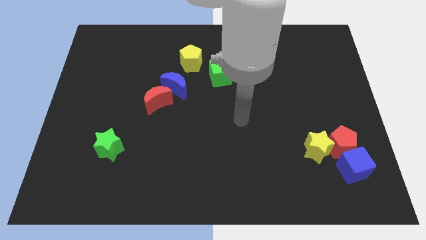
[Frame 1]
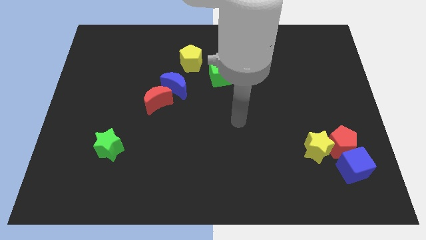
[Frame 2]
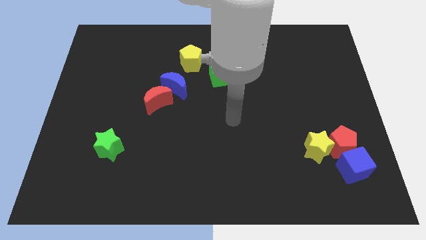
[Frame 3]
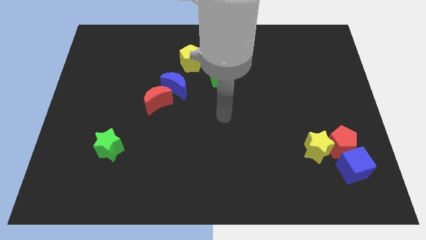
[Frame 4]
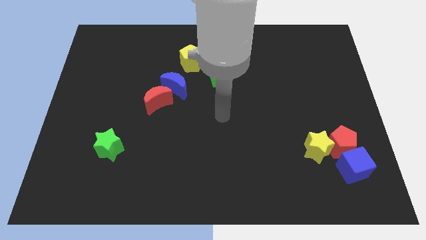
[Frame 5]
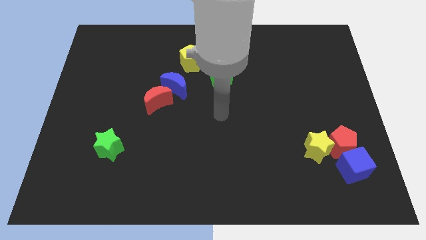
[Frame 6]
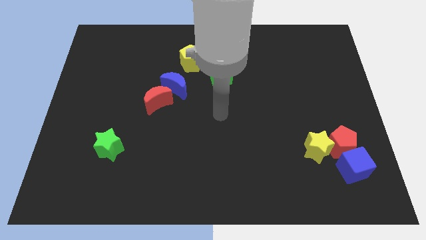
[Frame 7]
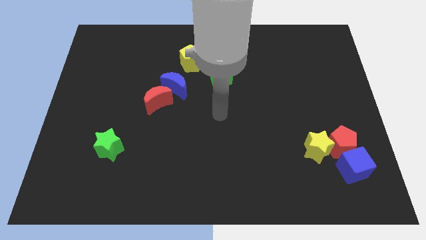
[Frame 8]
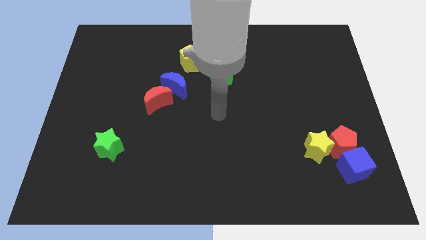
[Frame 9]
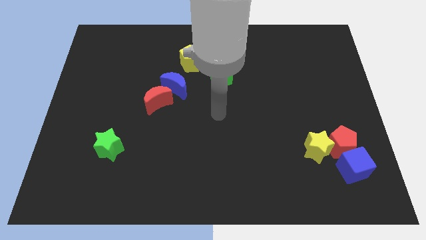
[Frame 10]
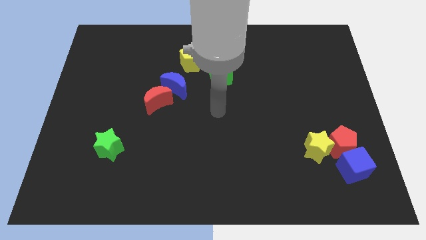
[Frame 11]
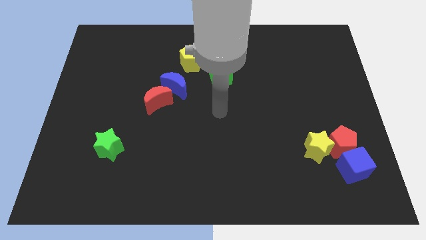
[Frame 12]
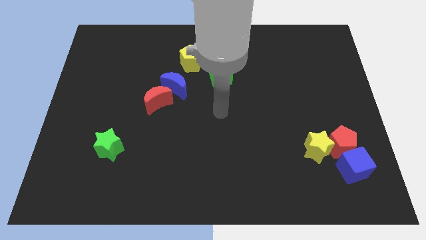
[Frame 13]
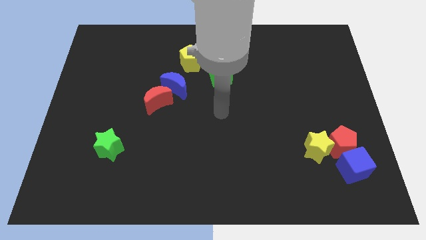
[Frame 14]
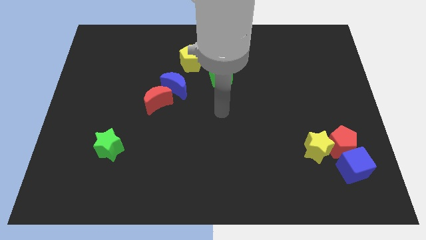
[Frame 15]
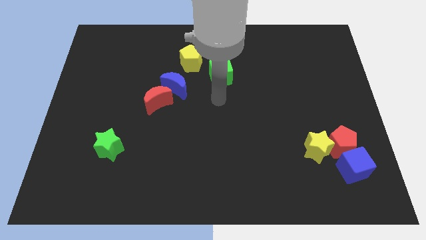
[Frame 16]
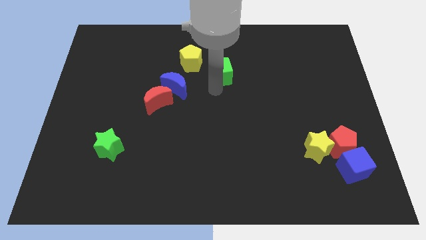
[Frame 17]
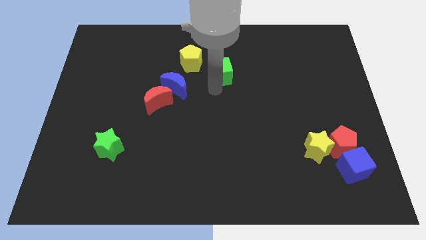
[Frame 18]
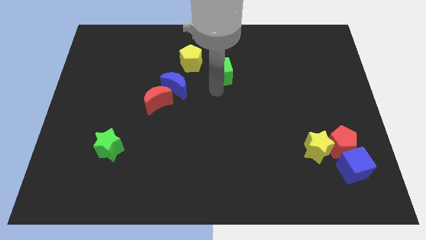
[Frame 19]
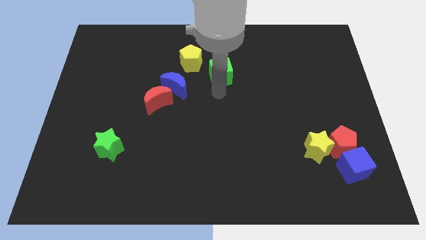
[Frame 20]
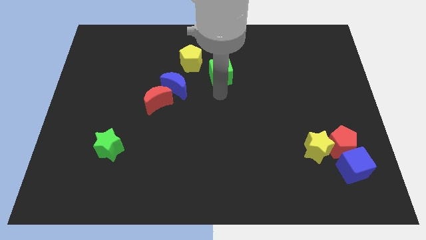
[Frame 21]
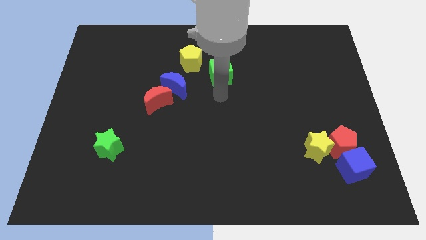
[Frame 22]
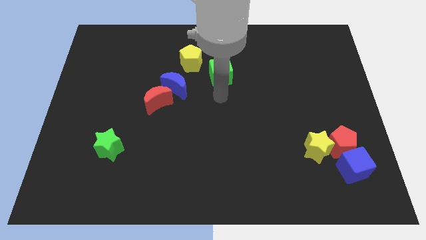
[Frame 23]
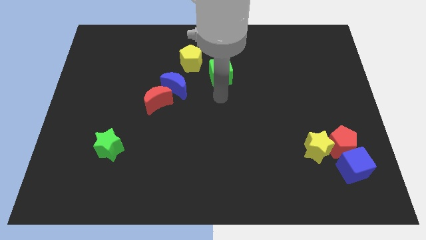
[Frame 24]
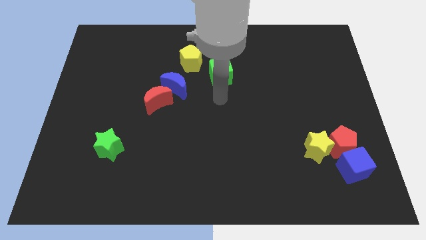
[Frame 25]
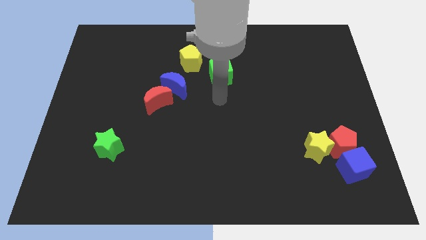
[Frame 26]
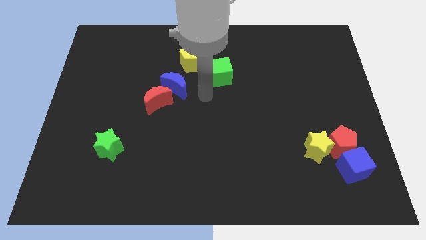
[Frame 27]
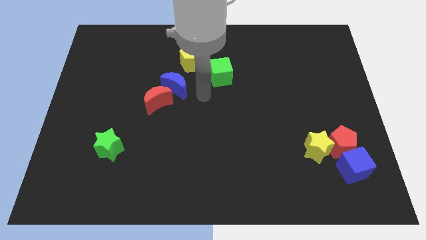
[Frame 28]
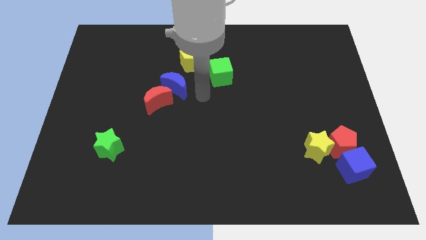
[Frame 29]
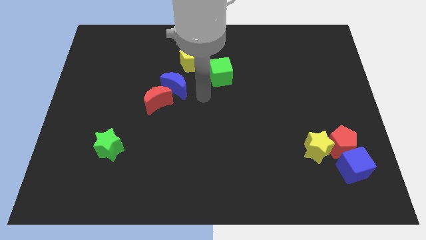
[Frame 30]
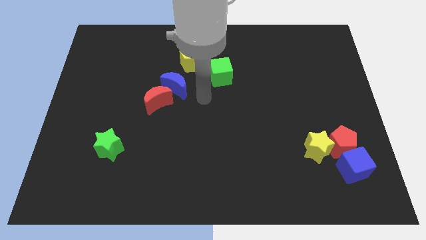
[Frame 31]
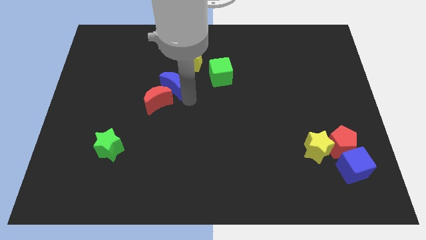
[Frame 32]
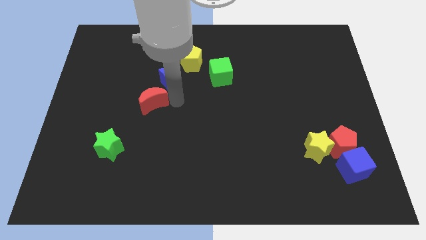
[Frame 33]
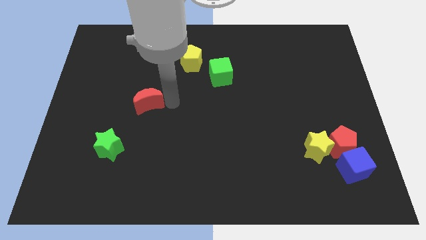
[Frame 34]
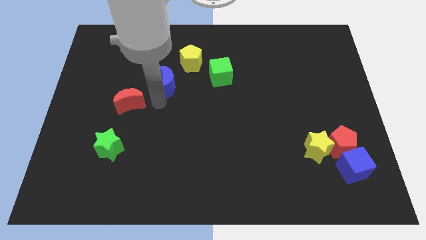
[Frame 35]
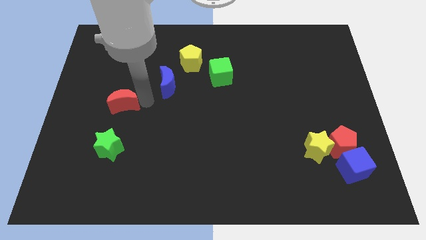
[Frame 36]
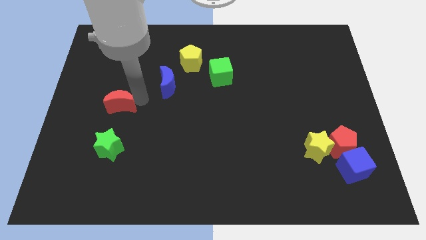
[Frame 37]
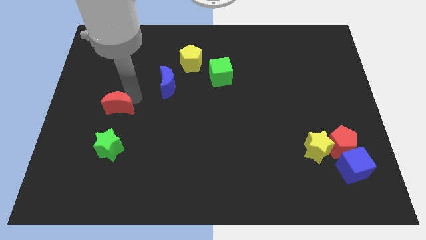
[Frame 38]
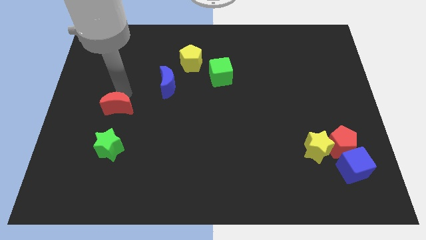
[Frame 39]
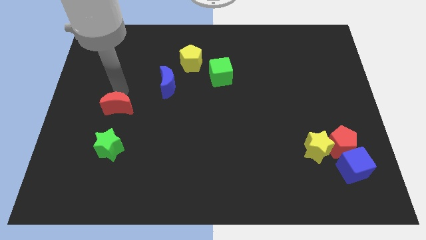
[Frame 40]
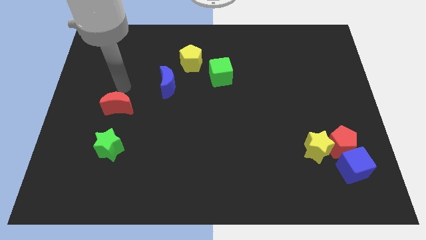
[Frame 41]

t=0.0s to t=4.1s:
place red crescent away from blue crescent

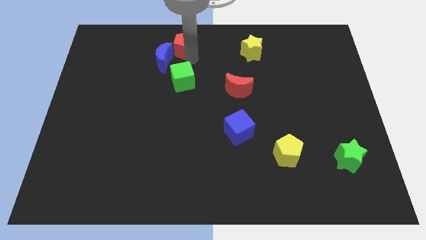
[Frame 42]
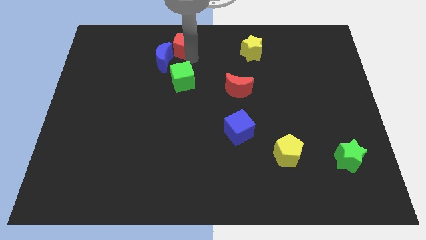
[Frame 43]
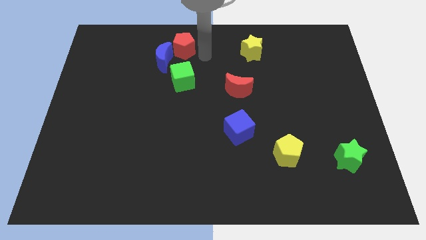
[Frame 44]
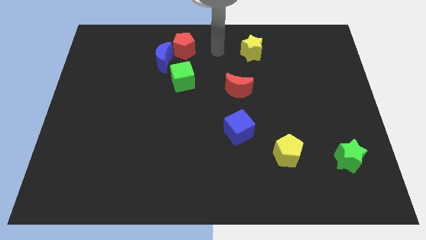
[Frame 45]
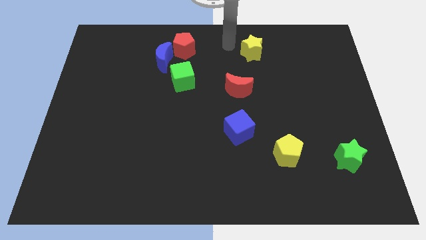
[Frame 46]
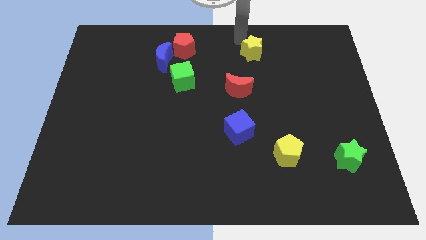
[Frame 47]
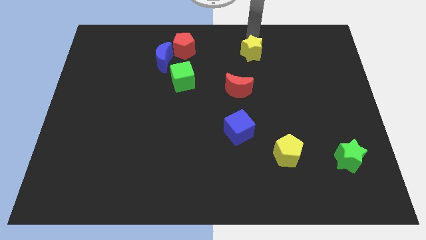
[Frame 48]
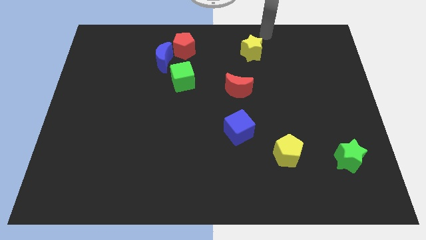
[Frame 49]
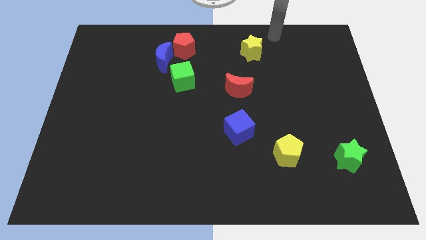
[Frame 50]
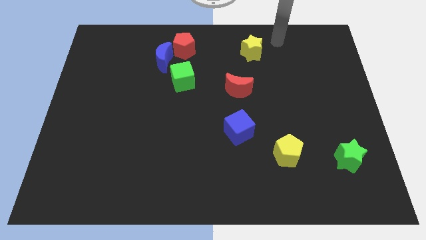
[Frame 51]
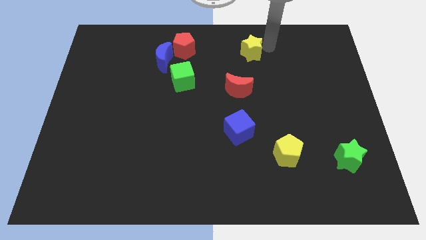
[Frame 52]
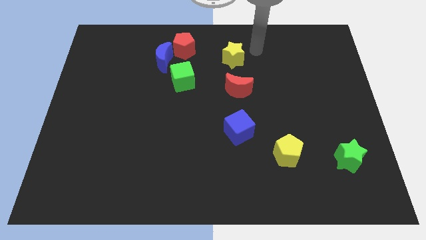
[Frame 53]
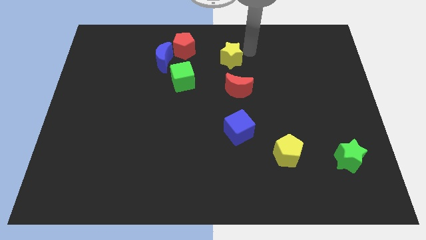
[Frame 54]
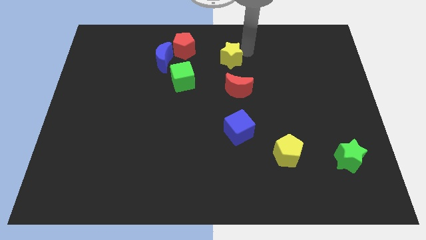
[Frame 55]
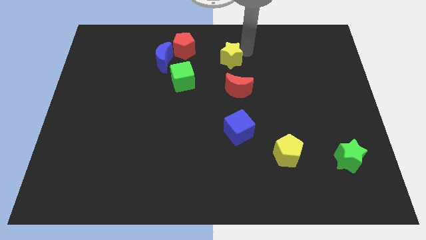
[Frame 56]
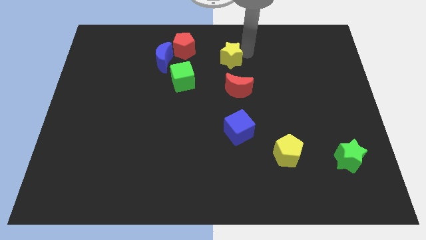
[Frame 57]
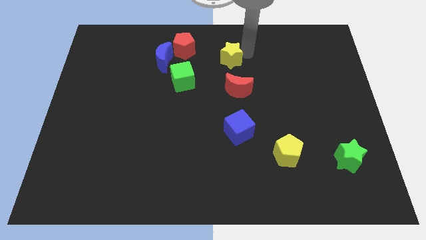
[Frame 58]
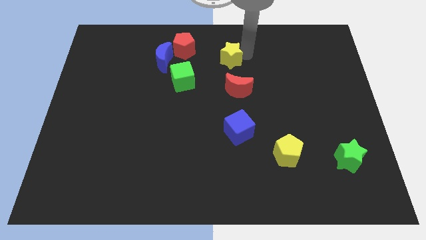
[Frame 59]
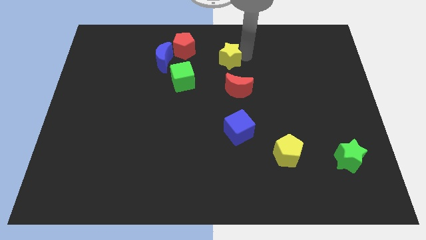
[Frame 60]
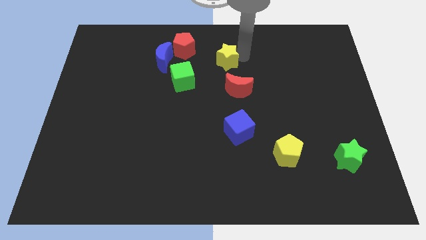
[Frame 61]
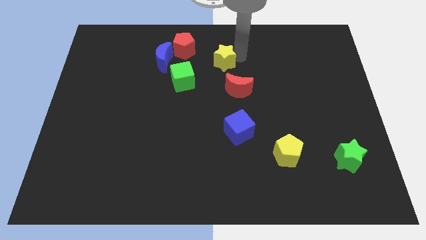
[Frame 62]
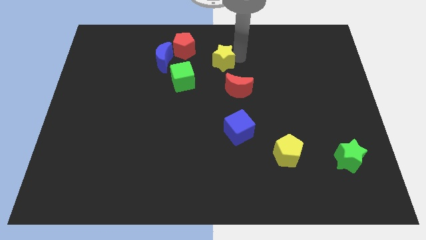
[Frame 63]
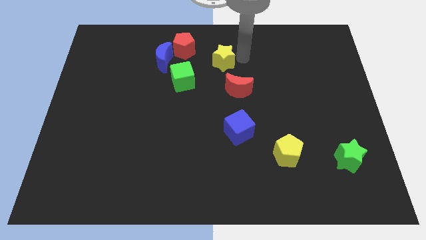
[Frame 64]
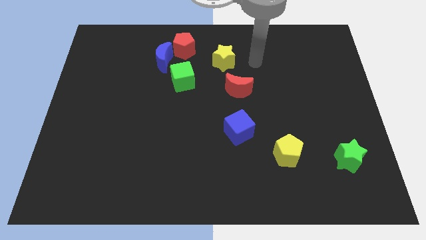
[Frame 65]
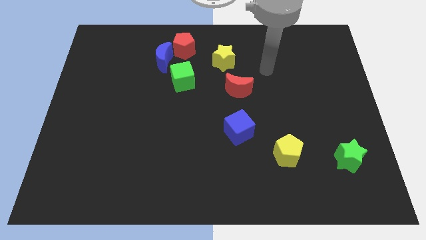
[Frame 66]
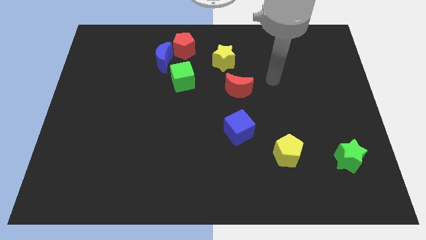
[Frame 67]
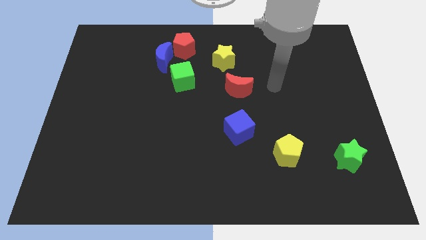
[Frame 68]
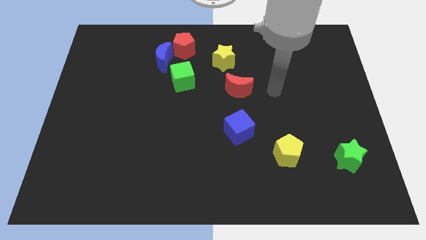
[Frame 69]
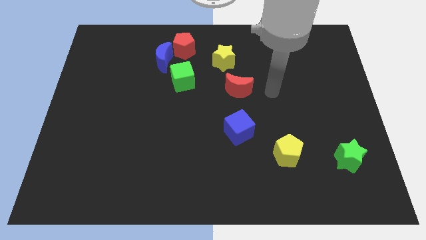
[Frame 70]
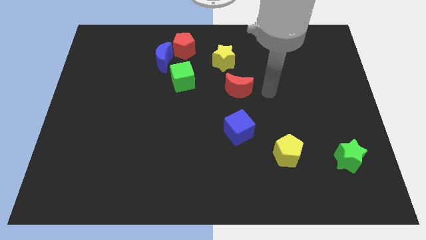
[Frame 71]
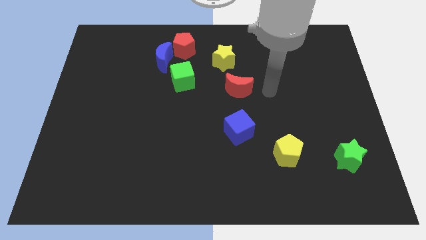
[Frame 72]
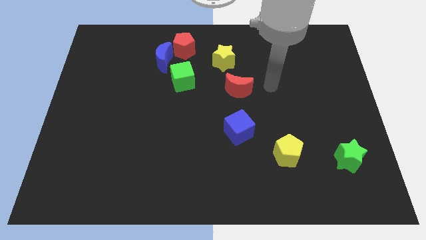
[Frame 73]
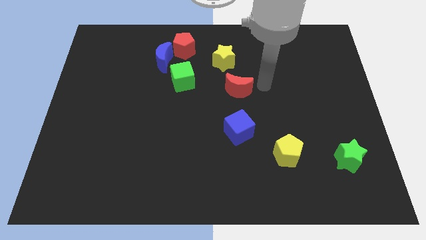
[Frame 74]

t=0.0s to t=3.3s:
push the yellow star to the top left to the red crescent

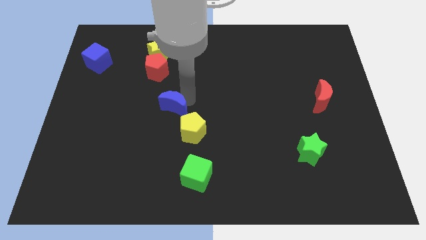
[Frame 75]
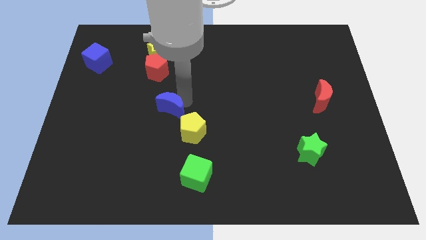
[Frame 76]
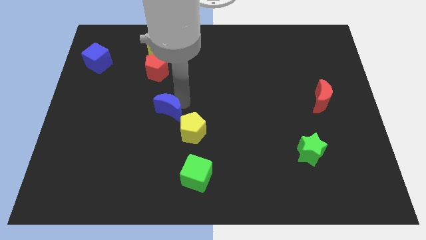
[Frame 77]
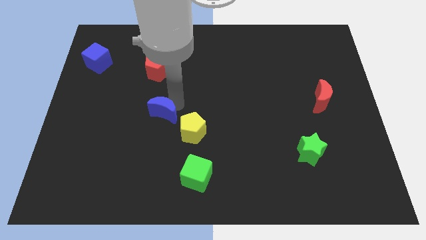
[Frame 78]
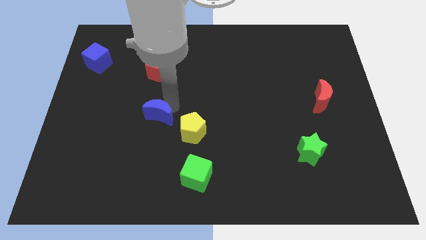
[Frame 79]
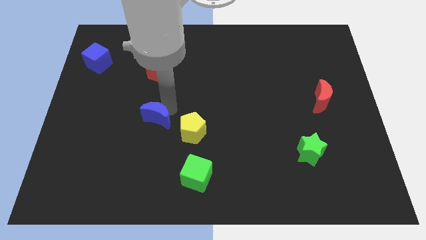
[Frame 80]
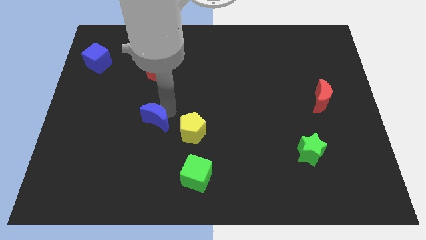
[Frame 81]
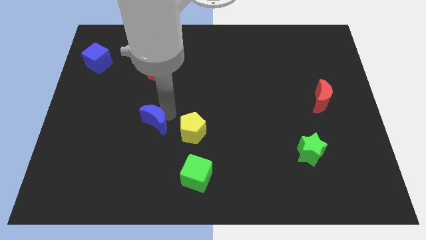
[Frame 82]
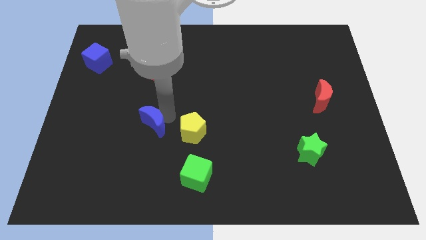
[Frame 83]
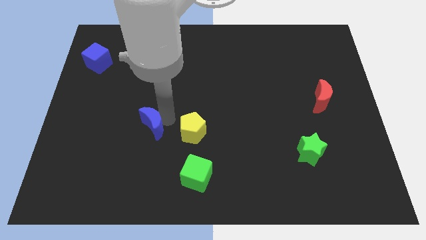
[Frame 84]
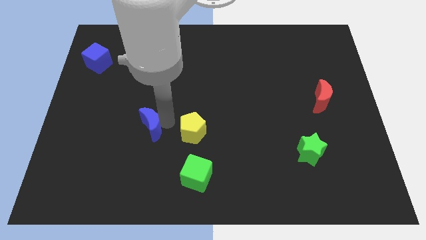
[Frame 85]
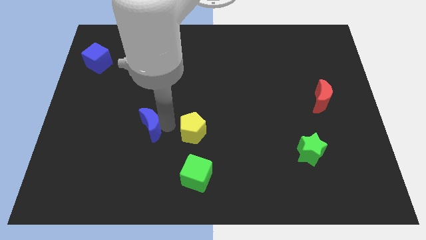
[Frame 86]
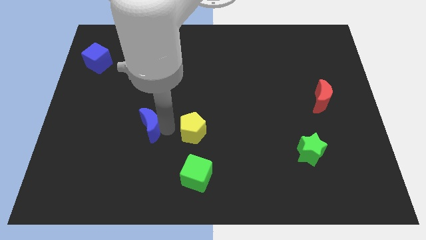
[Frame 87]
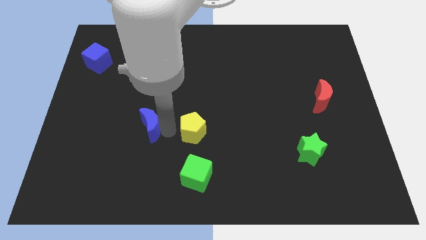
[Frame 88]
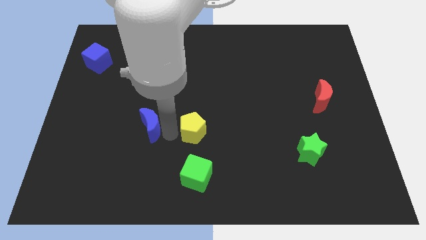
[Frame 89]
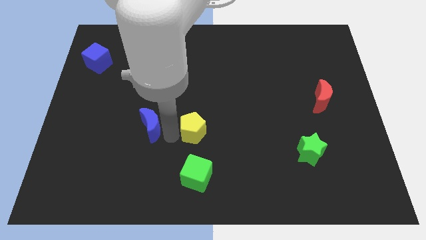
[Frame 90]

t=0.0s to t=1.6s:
place blue moon left to yellow pentagon
